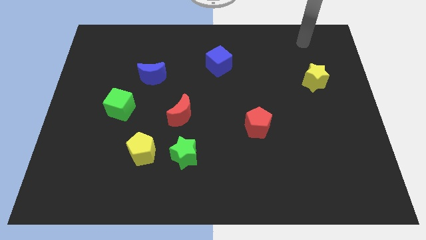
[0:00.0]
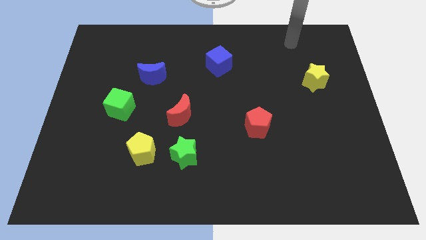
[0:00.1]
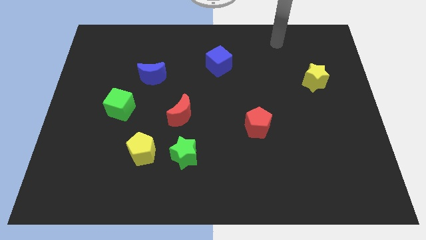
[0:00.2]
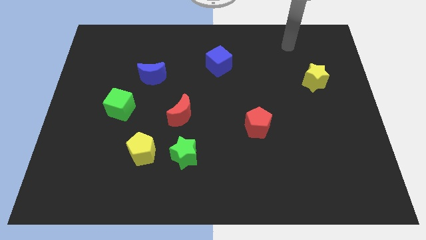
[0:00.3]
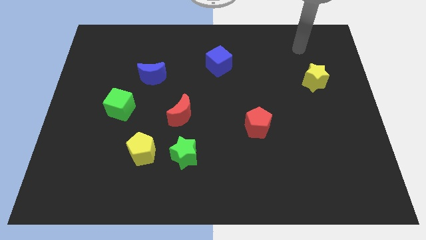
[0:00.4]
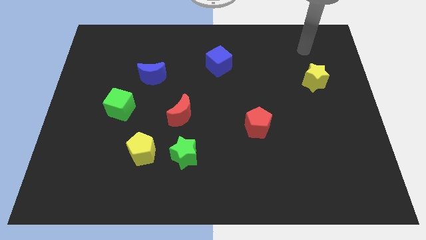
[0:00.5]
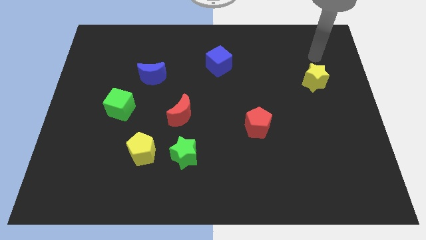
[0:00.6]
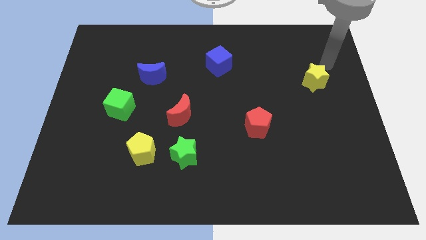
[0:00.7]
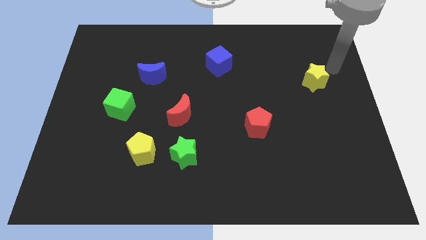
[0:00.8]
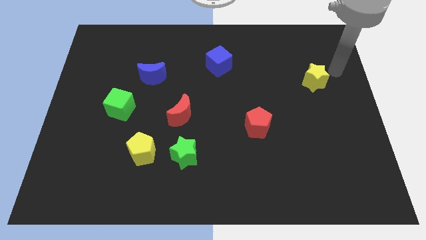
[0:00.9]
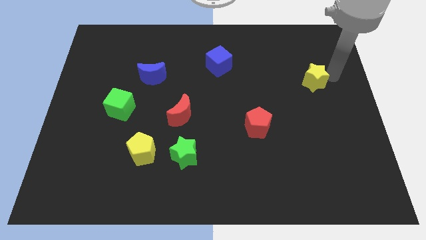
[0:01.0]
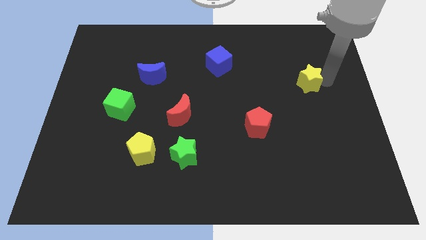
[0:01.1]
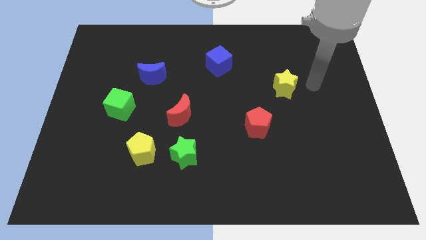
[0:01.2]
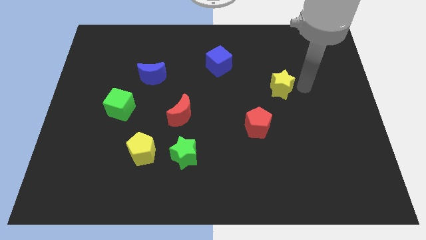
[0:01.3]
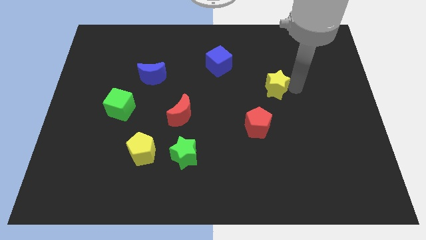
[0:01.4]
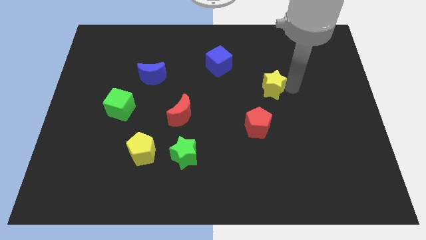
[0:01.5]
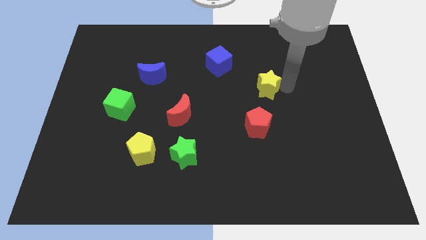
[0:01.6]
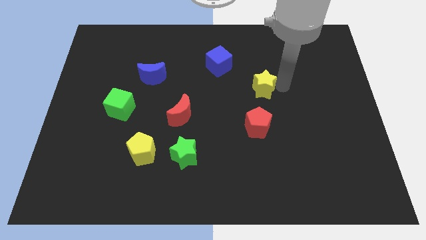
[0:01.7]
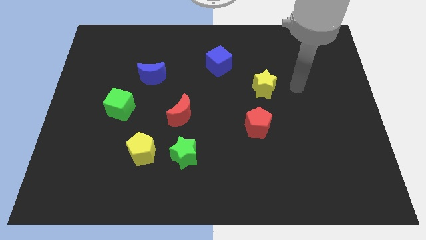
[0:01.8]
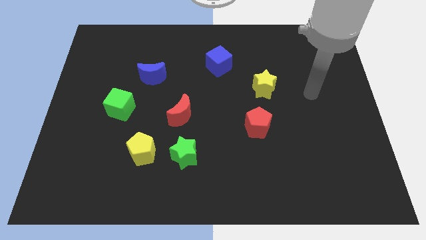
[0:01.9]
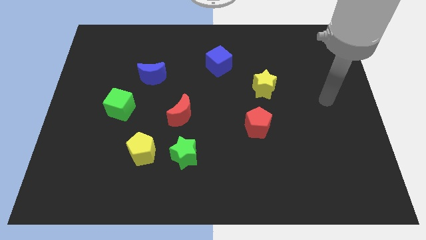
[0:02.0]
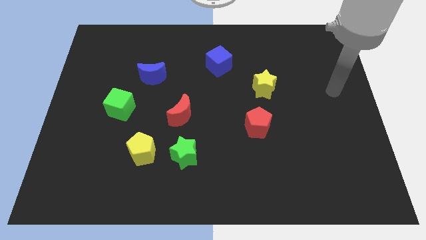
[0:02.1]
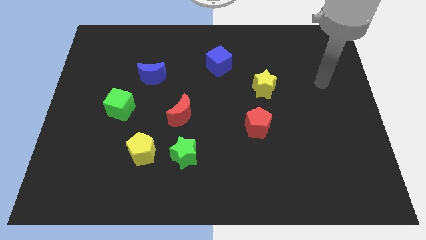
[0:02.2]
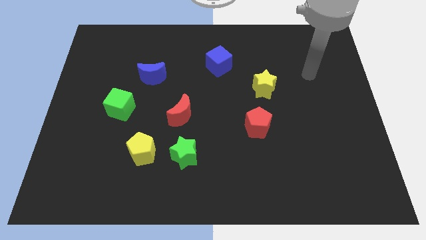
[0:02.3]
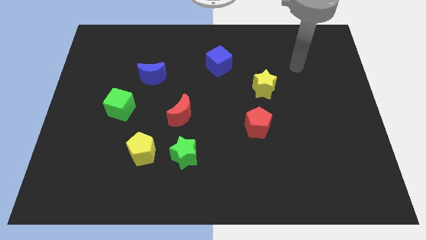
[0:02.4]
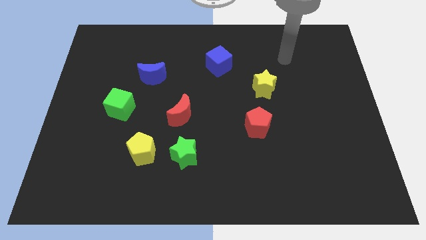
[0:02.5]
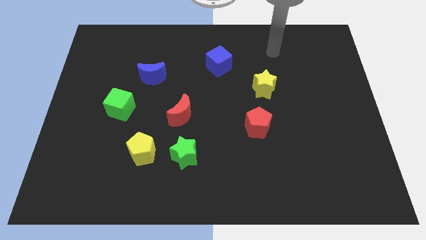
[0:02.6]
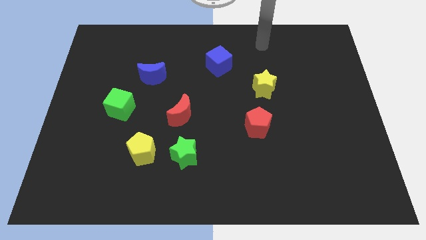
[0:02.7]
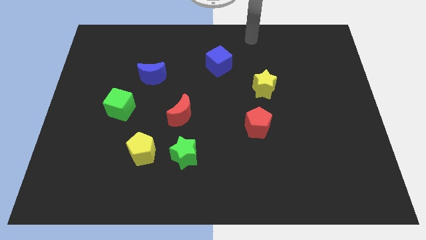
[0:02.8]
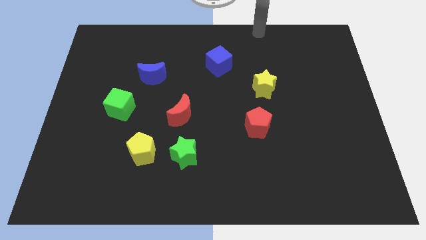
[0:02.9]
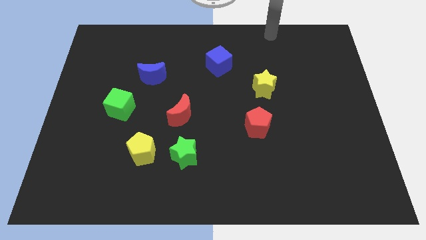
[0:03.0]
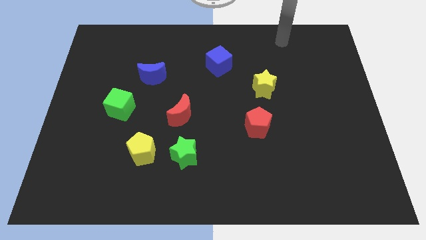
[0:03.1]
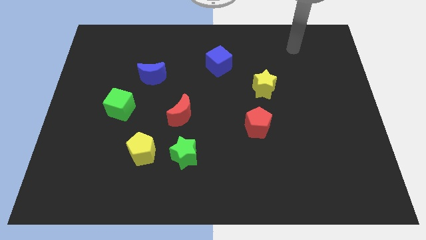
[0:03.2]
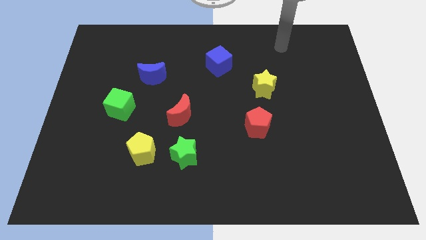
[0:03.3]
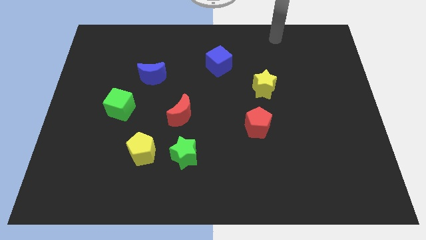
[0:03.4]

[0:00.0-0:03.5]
place the yellow star above the red pentagon

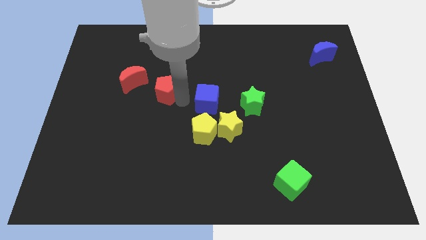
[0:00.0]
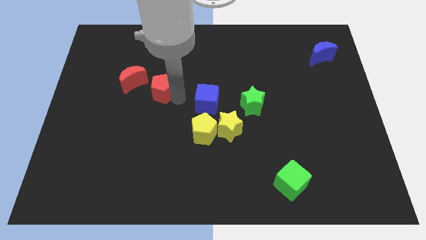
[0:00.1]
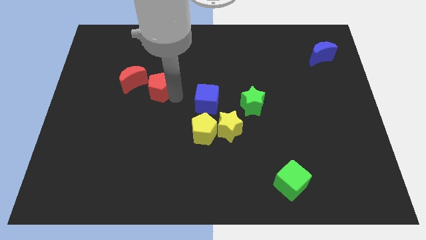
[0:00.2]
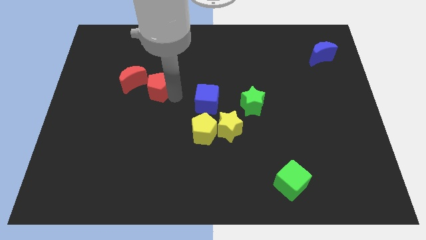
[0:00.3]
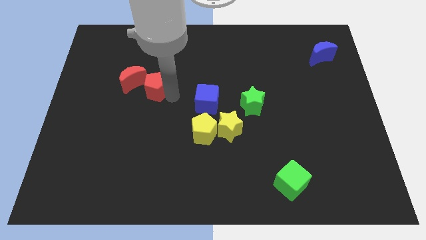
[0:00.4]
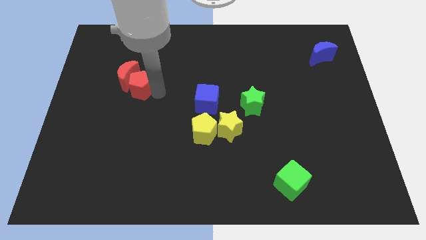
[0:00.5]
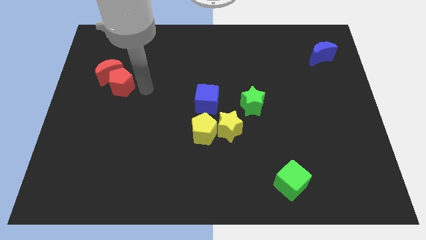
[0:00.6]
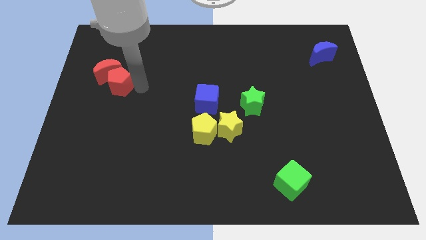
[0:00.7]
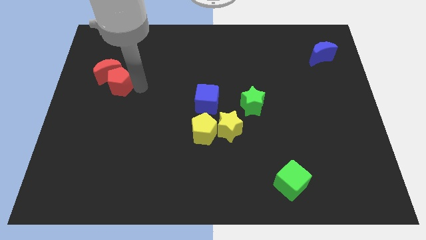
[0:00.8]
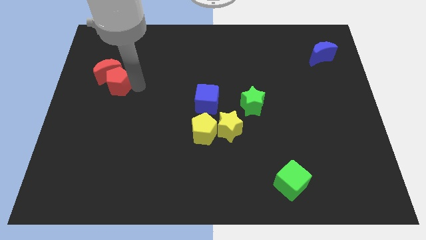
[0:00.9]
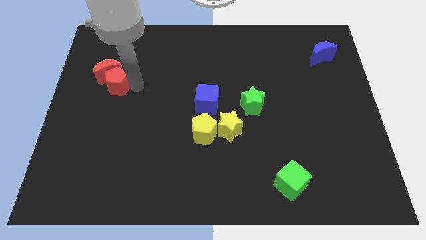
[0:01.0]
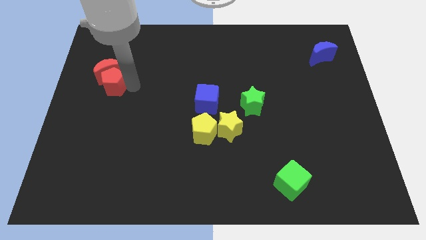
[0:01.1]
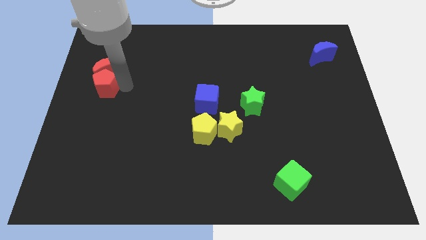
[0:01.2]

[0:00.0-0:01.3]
push the red pentagon into the red crescent towards the left

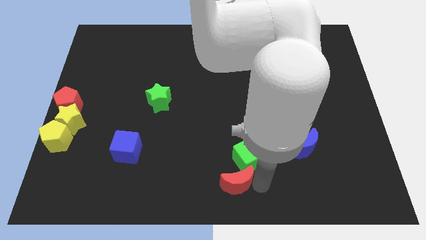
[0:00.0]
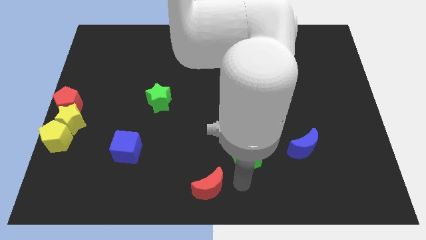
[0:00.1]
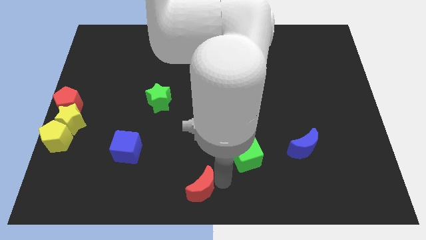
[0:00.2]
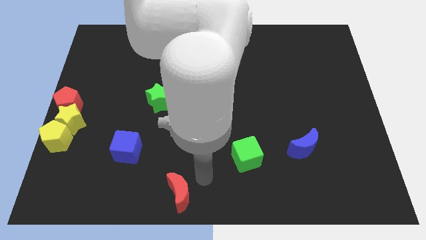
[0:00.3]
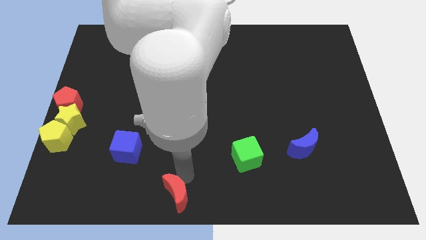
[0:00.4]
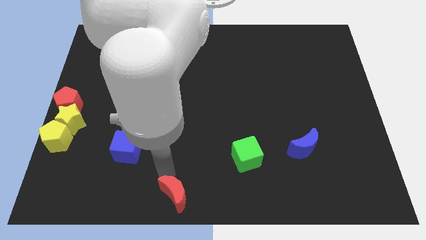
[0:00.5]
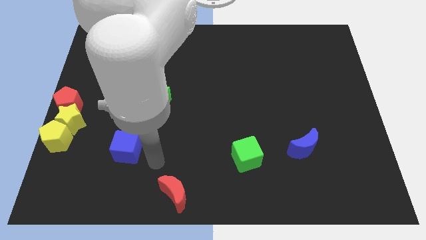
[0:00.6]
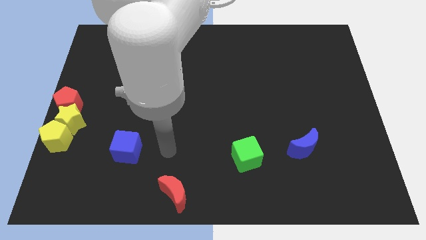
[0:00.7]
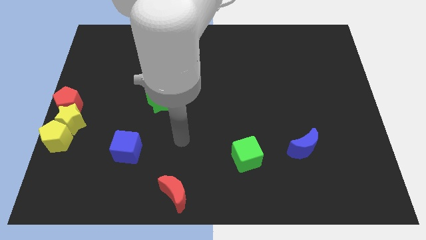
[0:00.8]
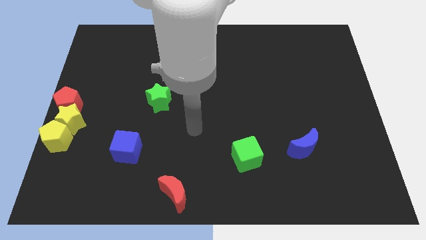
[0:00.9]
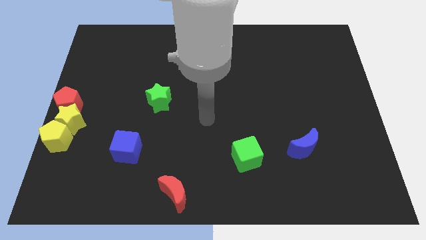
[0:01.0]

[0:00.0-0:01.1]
separate green cube and red moon

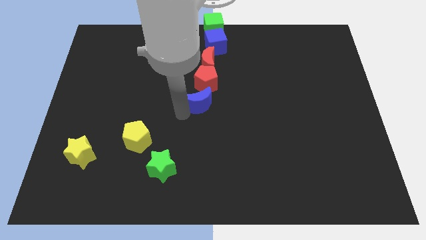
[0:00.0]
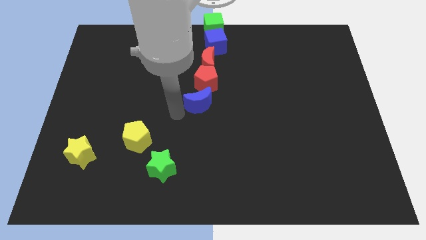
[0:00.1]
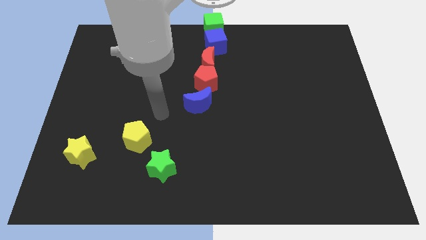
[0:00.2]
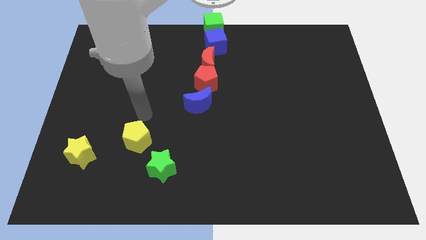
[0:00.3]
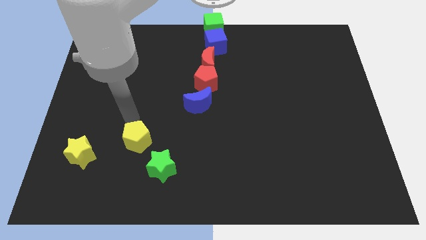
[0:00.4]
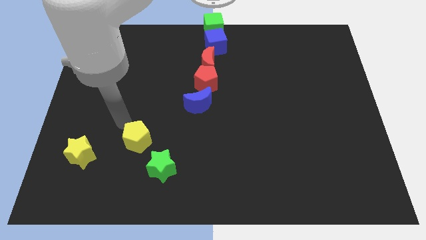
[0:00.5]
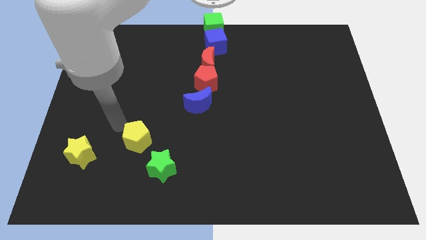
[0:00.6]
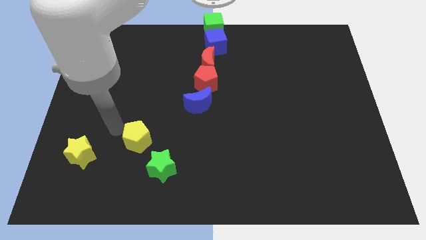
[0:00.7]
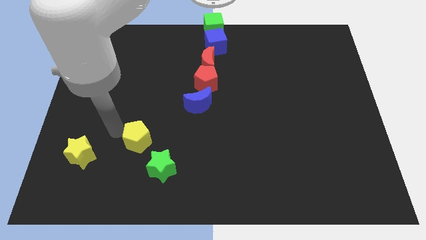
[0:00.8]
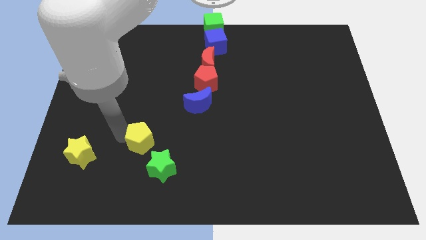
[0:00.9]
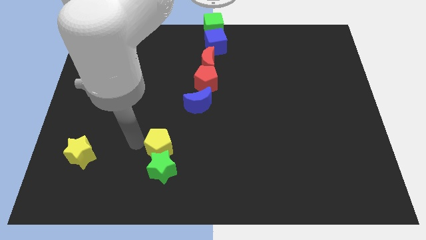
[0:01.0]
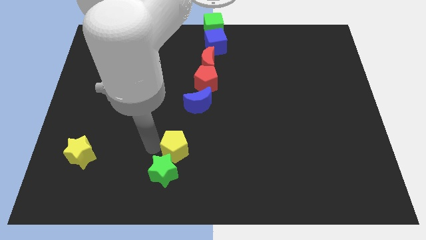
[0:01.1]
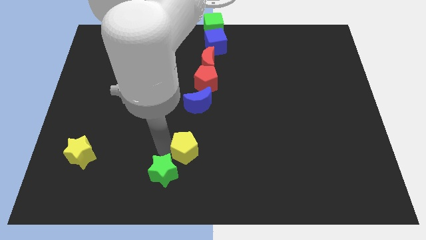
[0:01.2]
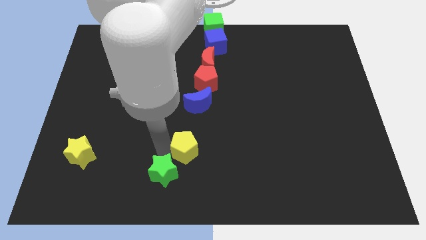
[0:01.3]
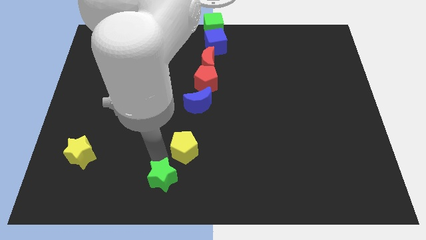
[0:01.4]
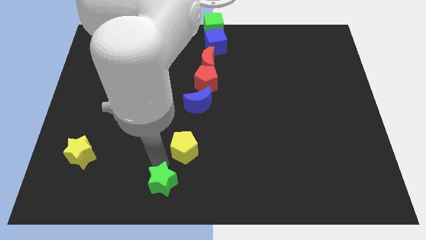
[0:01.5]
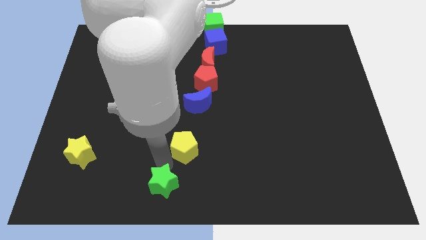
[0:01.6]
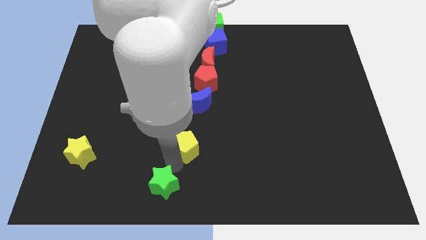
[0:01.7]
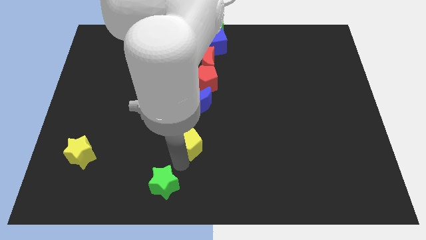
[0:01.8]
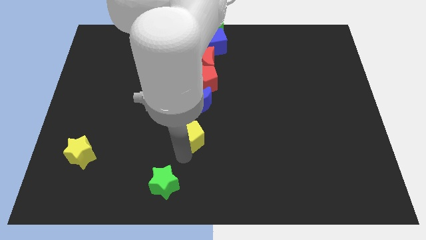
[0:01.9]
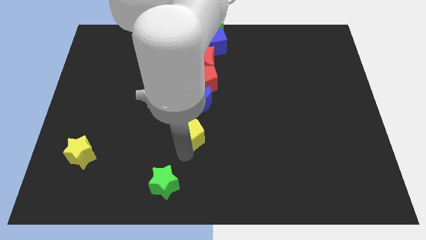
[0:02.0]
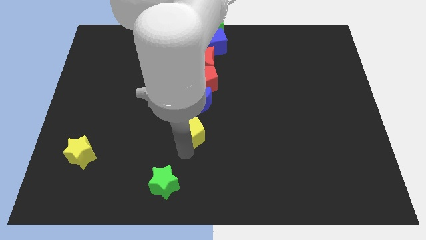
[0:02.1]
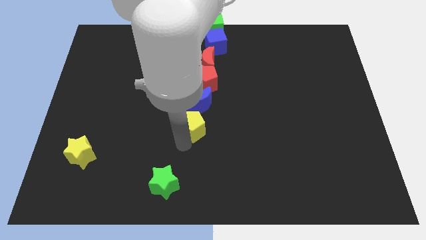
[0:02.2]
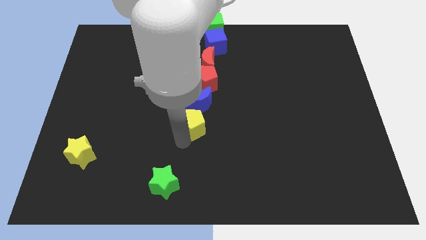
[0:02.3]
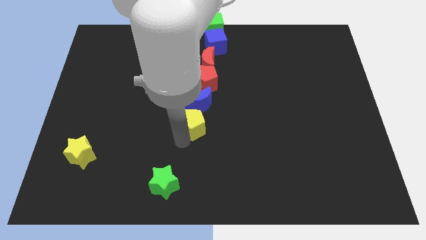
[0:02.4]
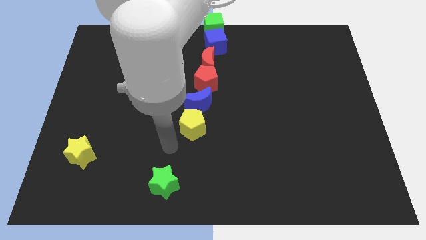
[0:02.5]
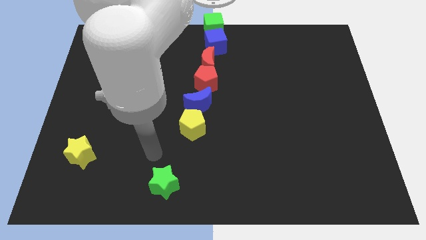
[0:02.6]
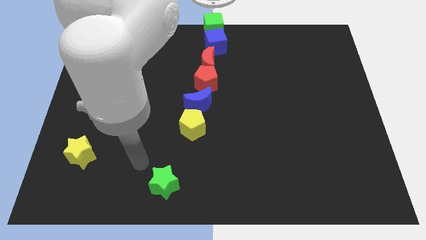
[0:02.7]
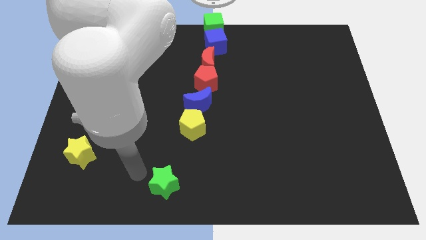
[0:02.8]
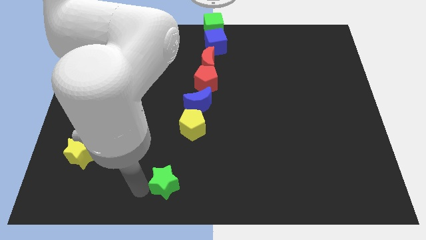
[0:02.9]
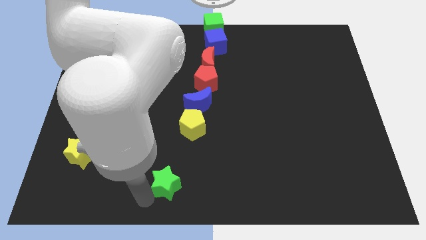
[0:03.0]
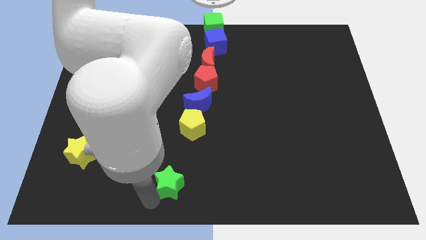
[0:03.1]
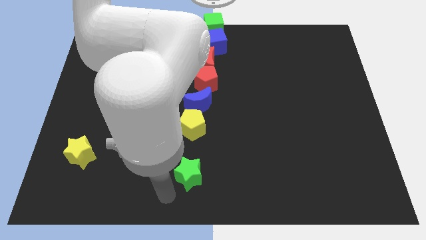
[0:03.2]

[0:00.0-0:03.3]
move yellow pentagon below the blue crescent
